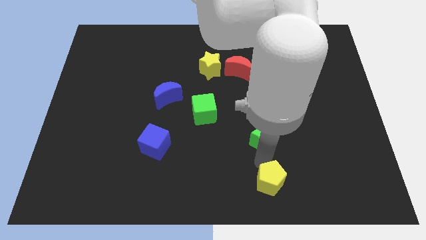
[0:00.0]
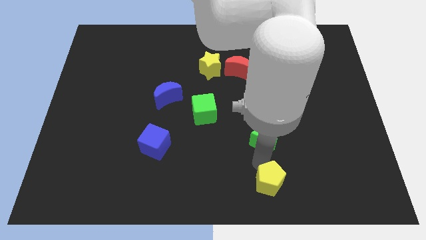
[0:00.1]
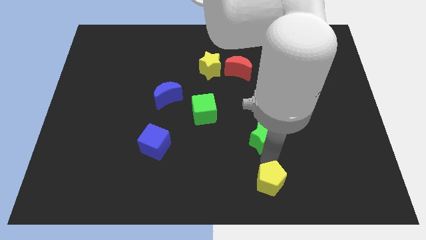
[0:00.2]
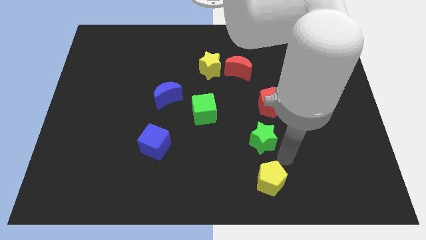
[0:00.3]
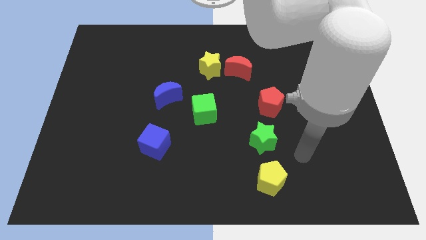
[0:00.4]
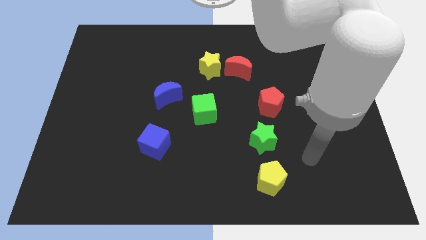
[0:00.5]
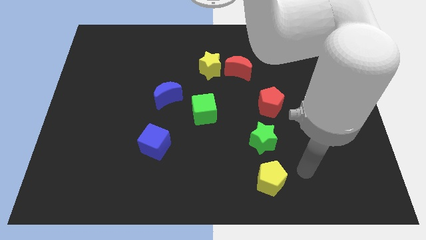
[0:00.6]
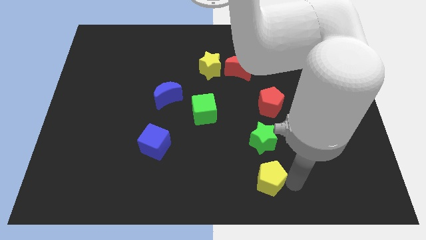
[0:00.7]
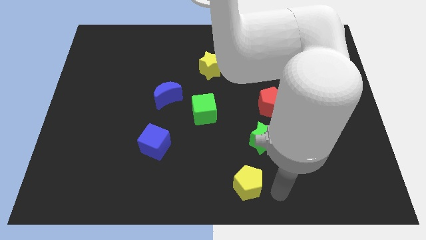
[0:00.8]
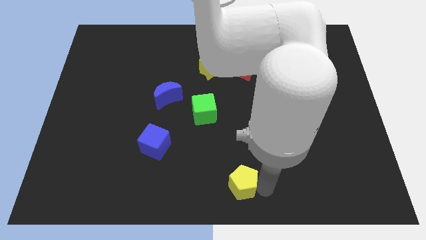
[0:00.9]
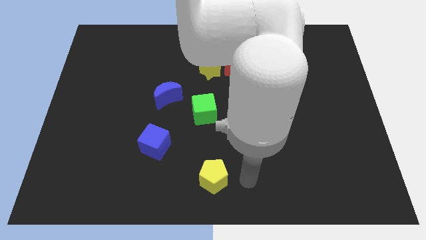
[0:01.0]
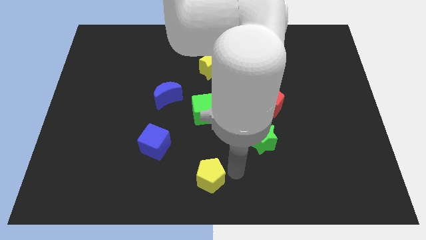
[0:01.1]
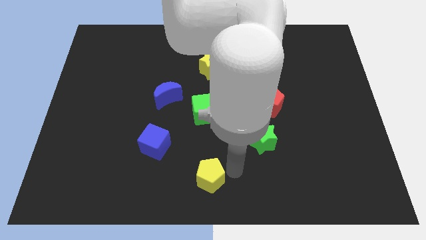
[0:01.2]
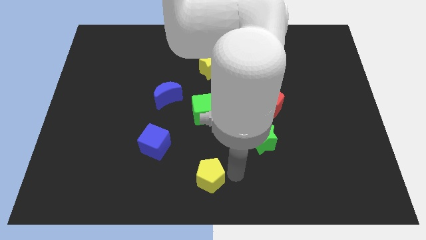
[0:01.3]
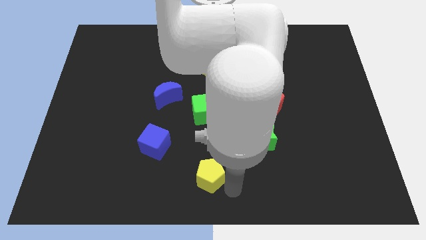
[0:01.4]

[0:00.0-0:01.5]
slide the yellow pentagon to the left side

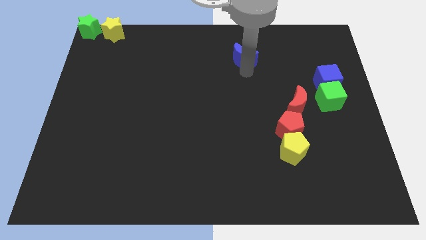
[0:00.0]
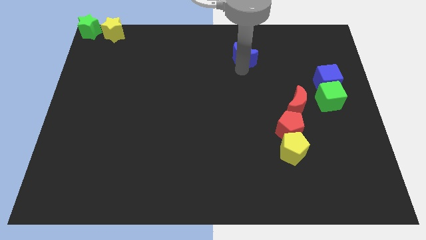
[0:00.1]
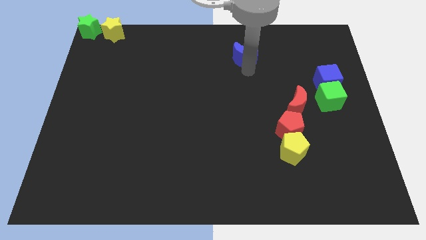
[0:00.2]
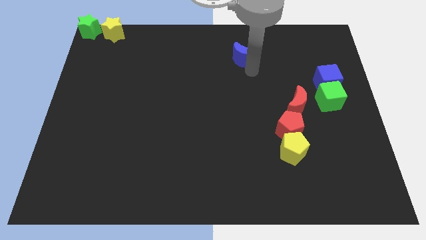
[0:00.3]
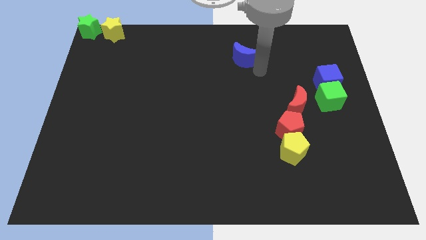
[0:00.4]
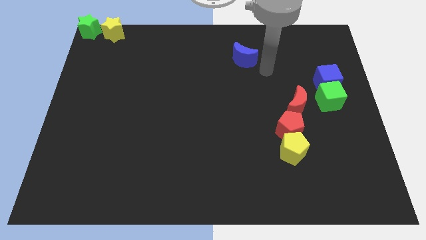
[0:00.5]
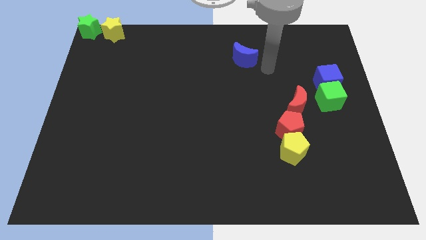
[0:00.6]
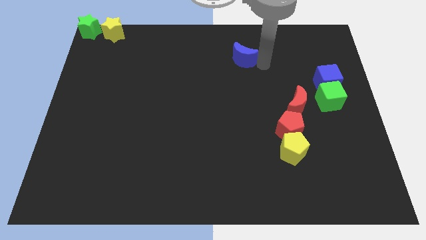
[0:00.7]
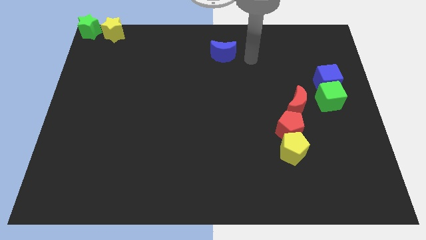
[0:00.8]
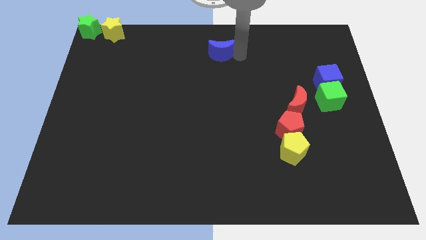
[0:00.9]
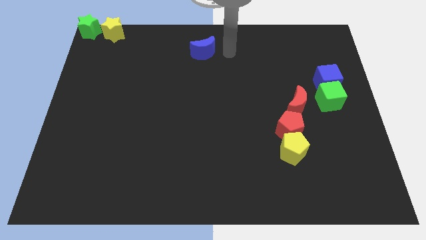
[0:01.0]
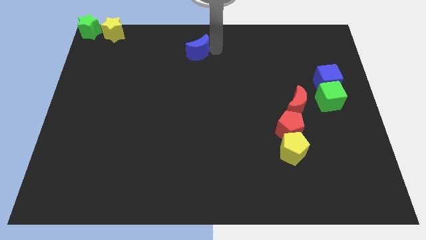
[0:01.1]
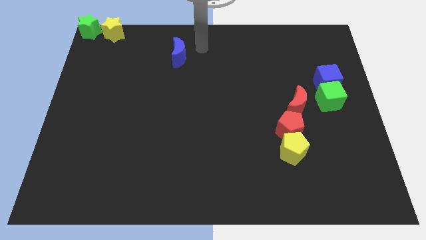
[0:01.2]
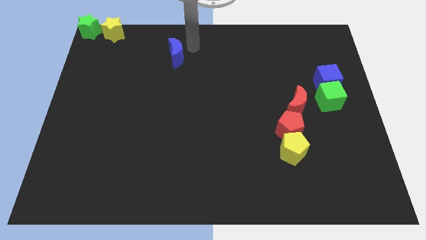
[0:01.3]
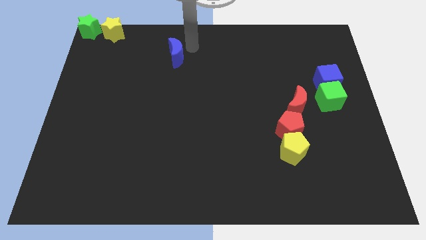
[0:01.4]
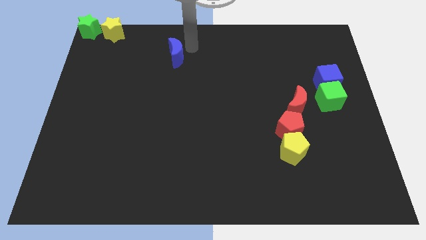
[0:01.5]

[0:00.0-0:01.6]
push the blue moon towards the left side of the board

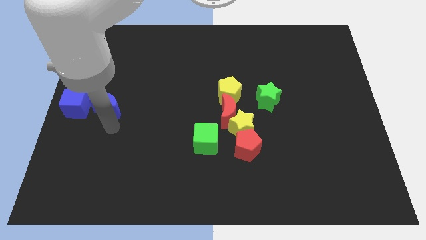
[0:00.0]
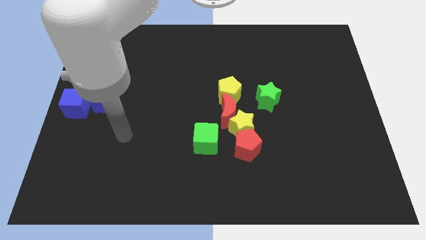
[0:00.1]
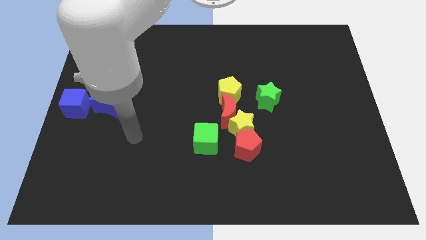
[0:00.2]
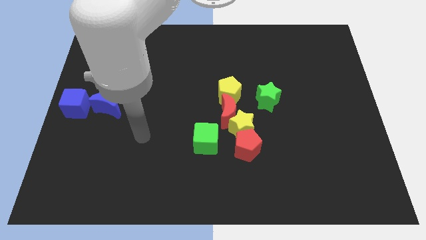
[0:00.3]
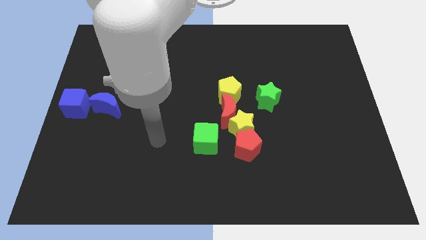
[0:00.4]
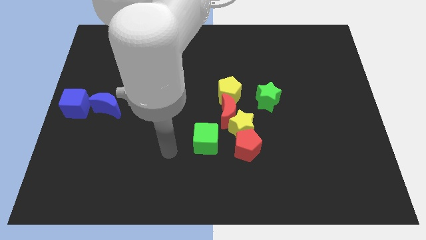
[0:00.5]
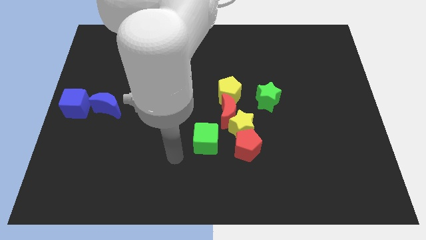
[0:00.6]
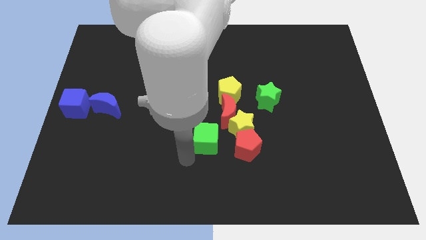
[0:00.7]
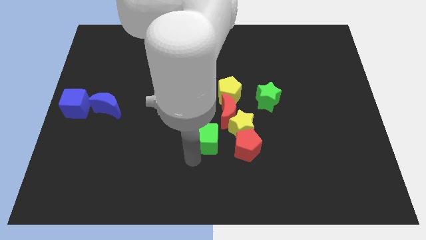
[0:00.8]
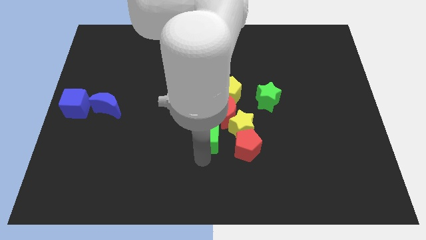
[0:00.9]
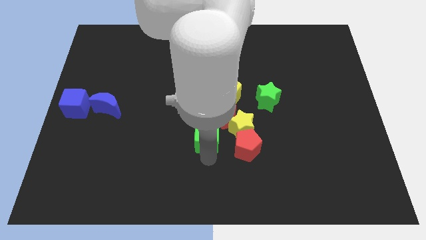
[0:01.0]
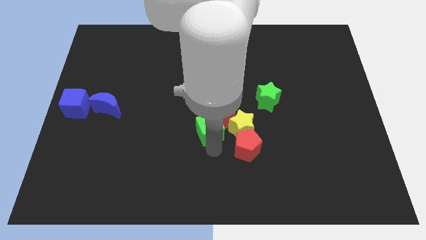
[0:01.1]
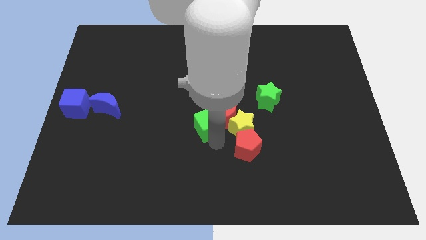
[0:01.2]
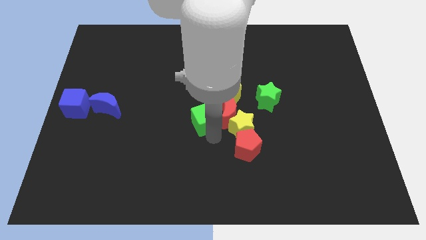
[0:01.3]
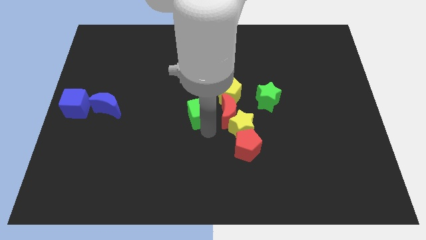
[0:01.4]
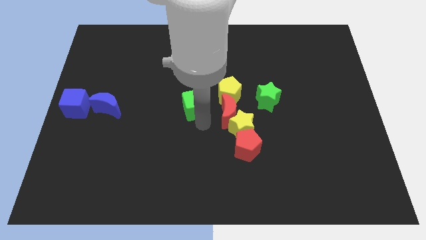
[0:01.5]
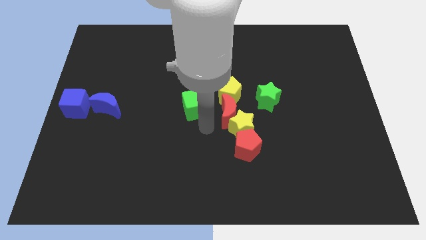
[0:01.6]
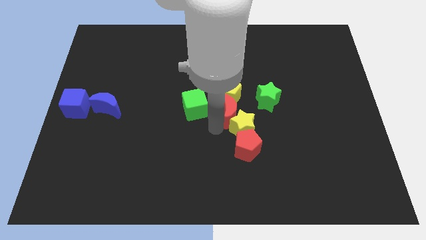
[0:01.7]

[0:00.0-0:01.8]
push the green cube slightly to the top

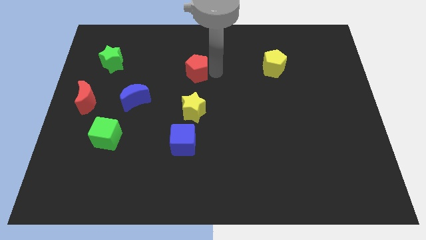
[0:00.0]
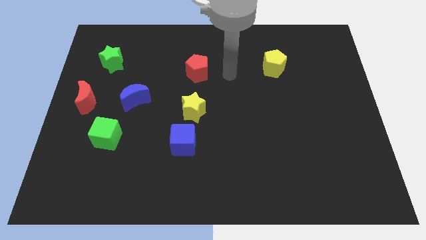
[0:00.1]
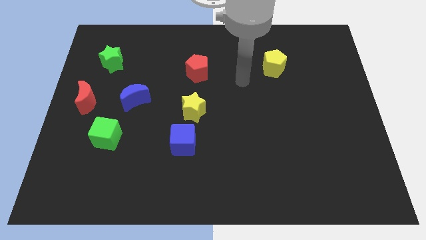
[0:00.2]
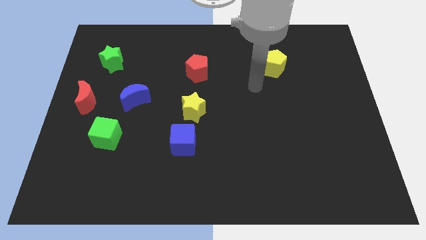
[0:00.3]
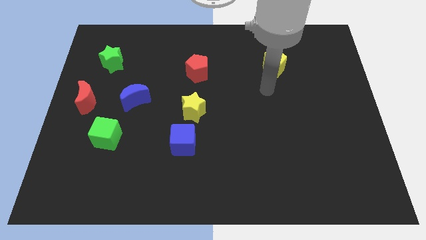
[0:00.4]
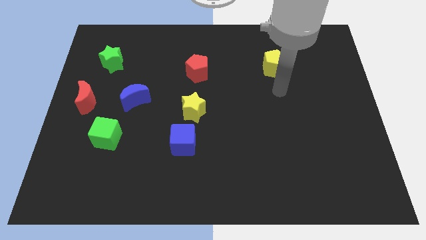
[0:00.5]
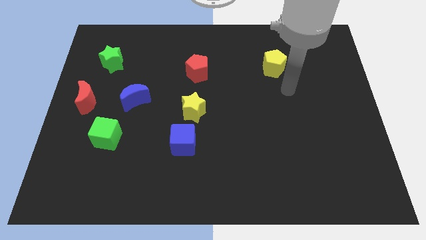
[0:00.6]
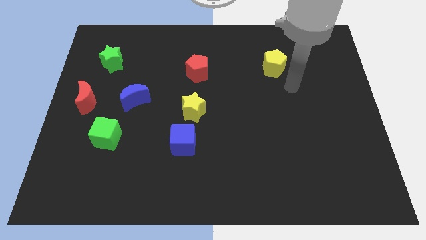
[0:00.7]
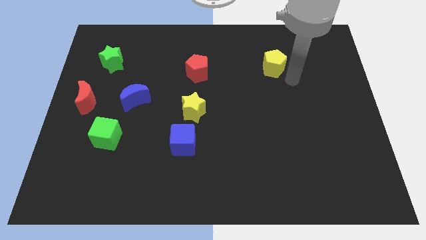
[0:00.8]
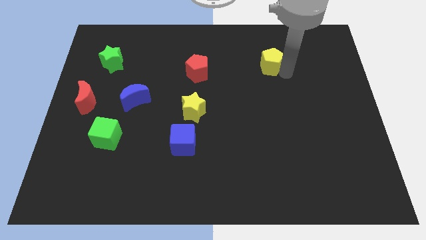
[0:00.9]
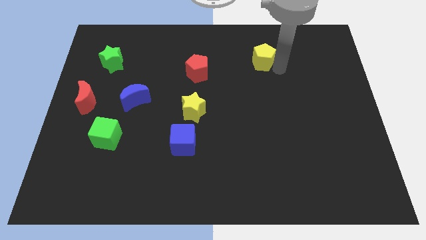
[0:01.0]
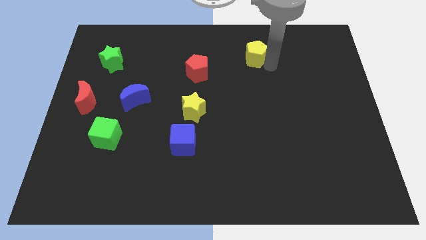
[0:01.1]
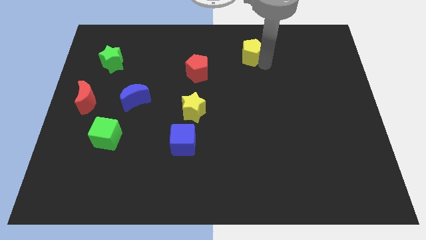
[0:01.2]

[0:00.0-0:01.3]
drag the yellow pentagon diagonally top right to the red pentagon

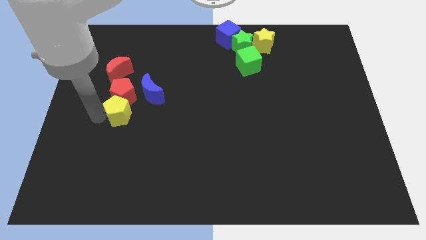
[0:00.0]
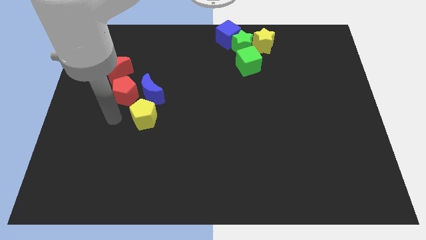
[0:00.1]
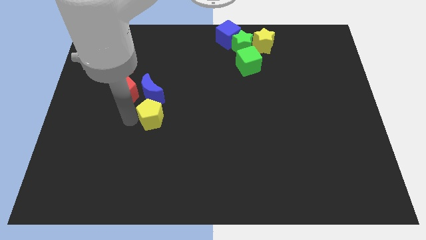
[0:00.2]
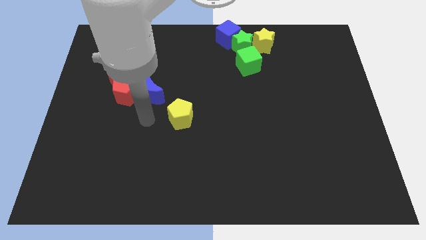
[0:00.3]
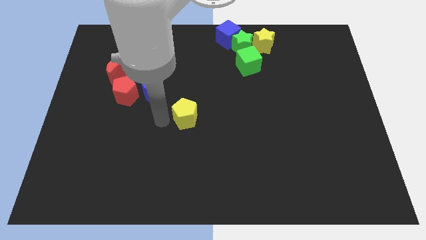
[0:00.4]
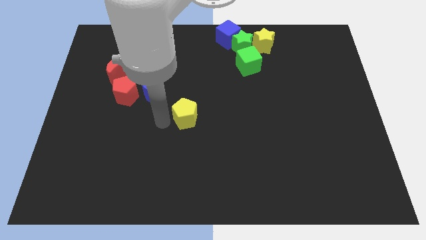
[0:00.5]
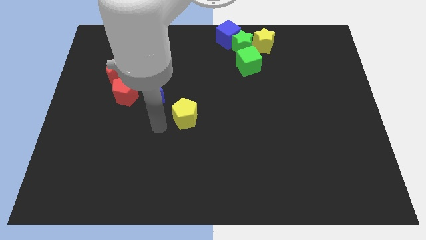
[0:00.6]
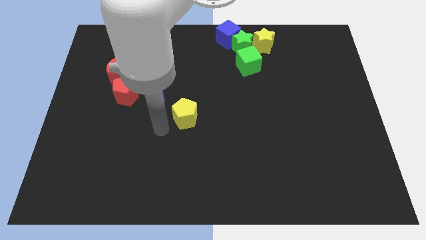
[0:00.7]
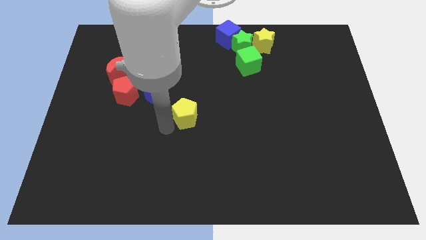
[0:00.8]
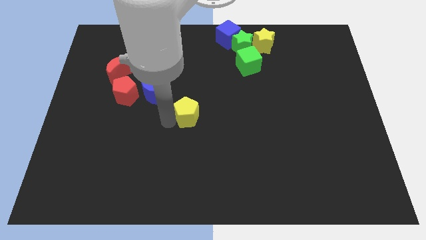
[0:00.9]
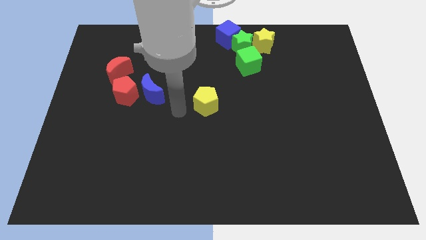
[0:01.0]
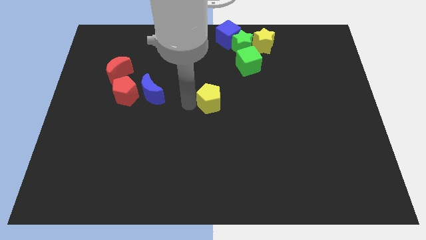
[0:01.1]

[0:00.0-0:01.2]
push the yellow pentagon to the center of the board

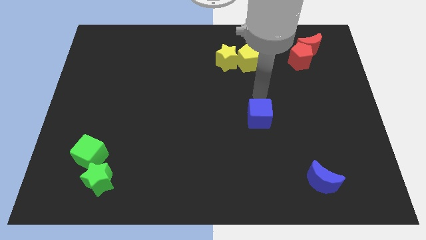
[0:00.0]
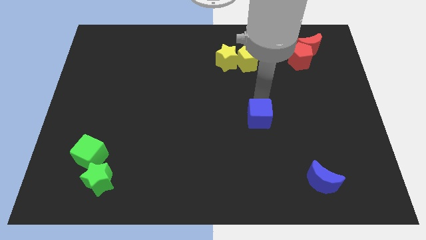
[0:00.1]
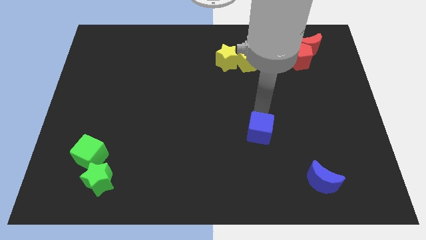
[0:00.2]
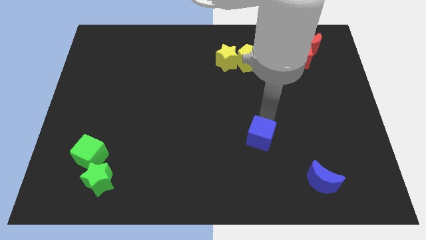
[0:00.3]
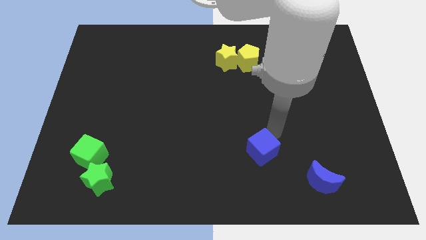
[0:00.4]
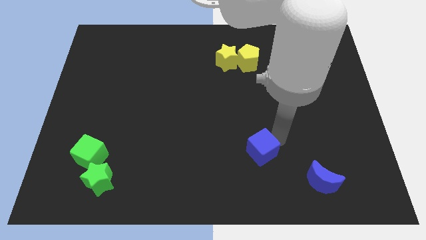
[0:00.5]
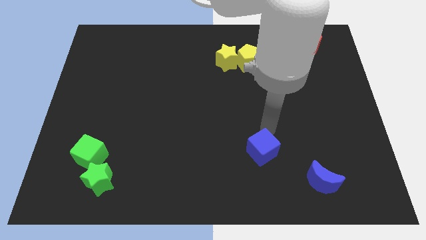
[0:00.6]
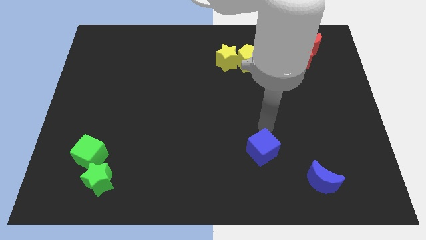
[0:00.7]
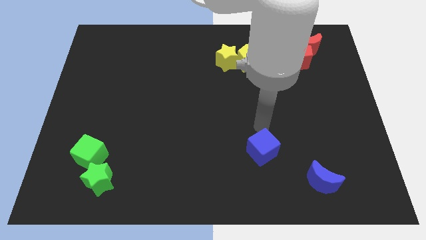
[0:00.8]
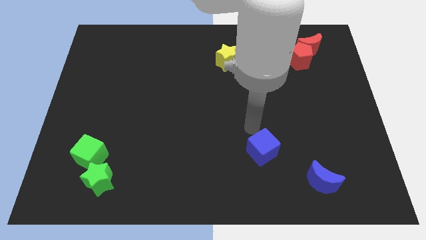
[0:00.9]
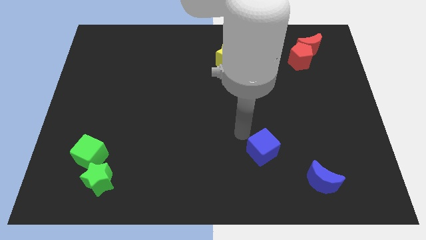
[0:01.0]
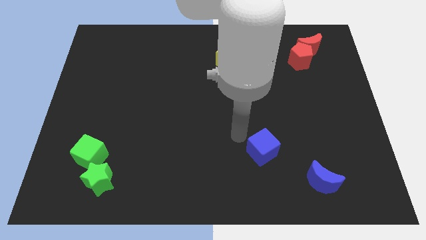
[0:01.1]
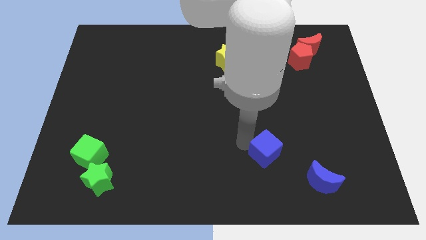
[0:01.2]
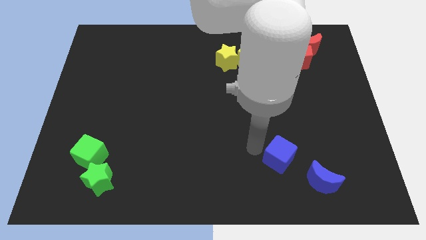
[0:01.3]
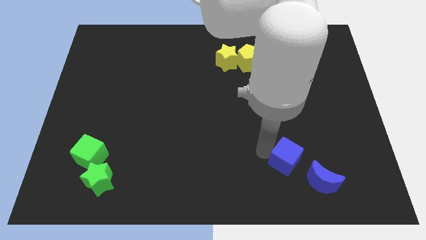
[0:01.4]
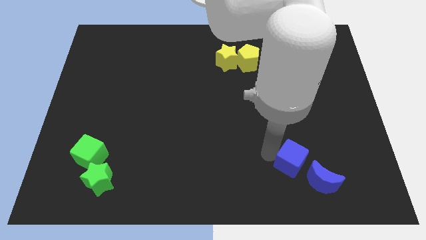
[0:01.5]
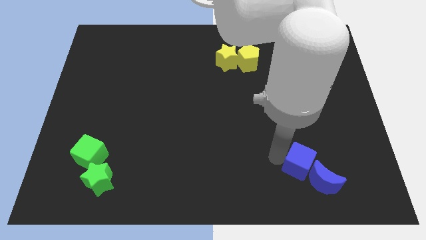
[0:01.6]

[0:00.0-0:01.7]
move the blue cube near to the blue criscent
